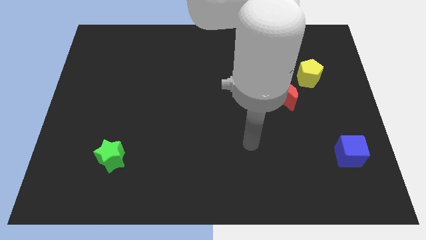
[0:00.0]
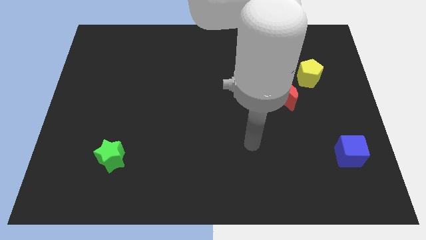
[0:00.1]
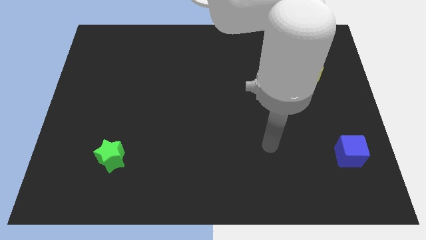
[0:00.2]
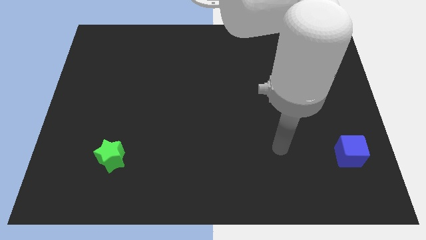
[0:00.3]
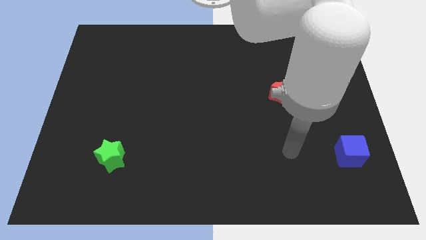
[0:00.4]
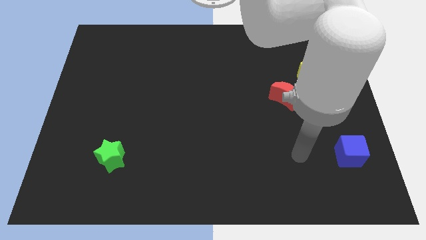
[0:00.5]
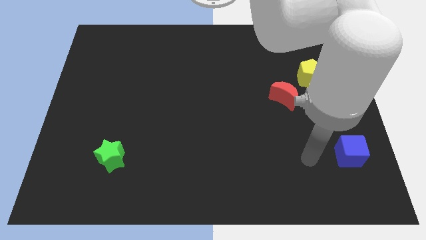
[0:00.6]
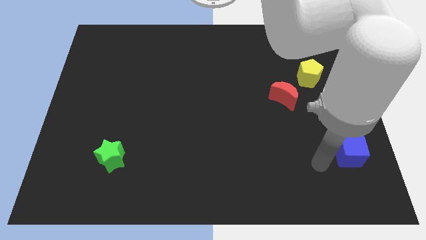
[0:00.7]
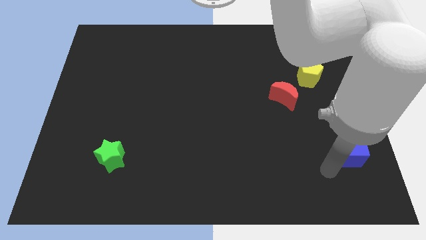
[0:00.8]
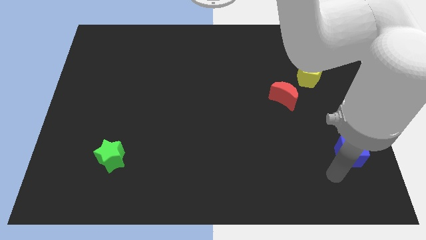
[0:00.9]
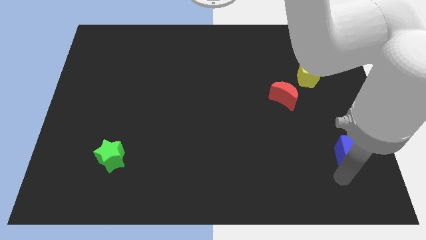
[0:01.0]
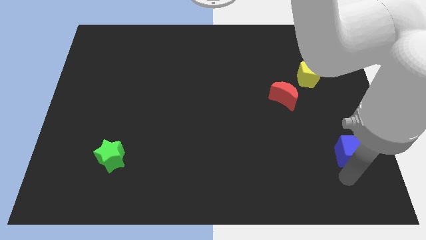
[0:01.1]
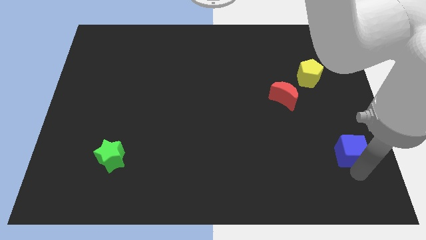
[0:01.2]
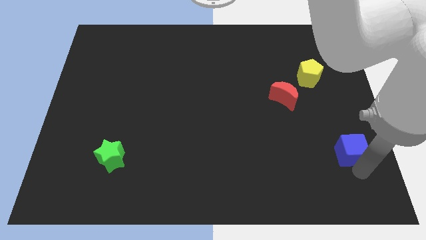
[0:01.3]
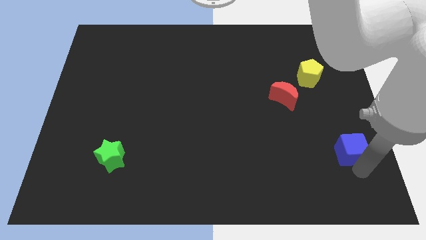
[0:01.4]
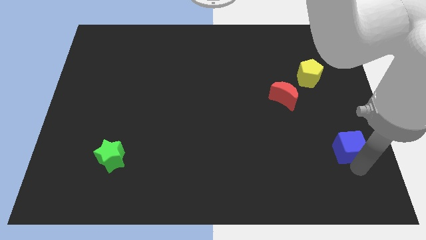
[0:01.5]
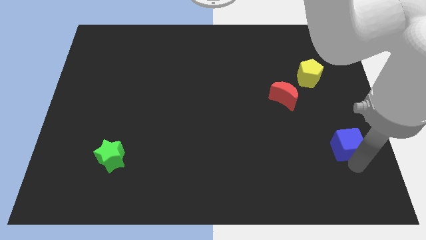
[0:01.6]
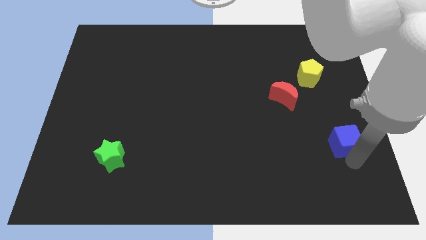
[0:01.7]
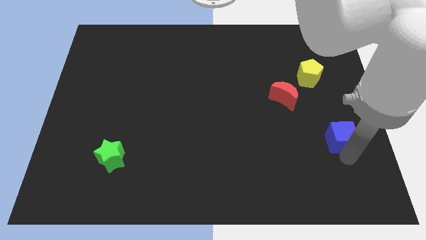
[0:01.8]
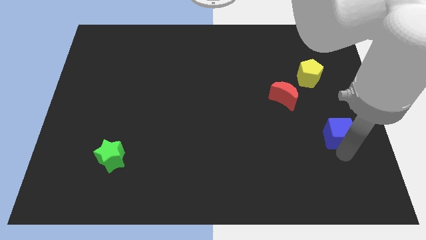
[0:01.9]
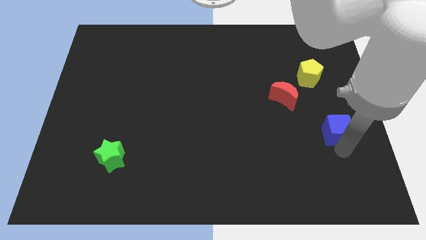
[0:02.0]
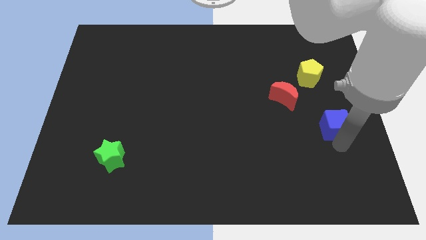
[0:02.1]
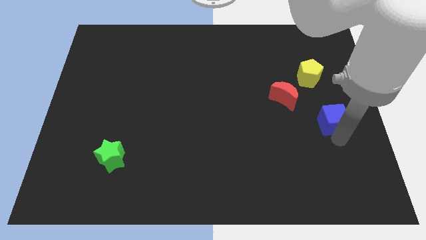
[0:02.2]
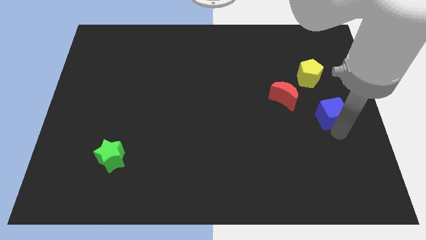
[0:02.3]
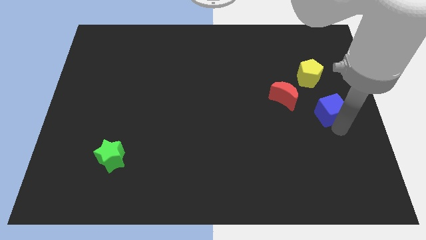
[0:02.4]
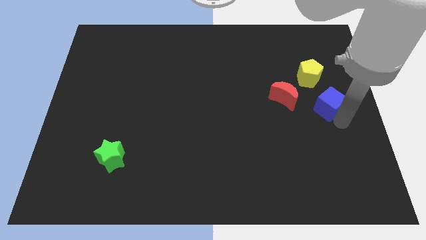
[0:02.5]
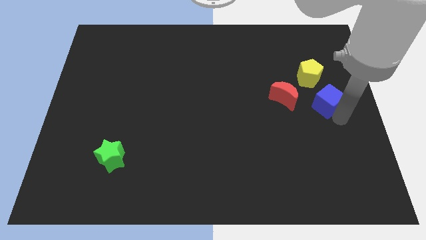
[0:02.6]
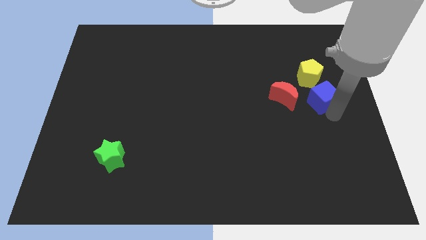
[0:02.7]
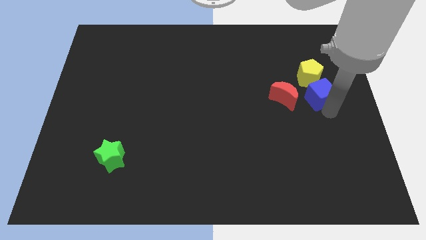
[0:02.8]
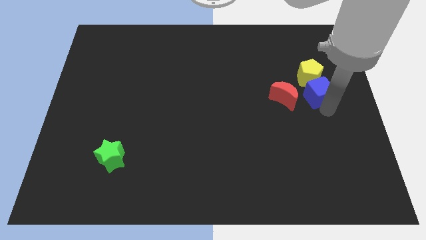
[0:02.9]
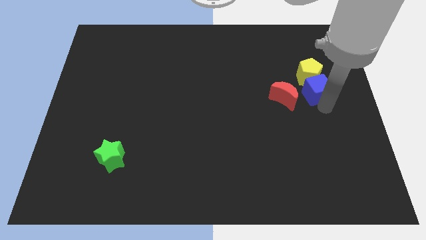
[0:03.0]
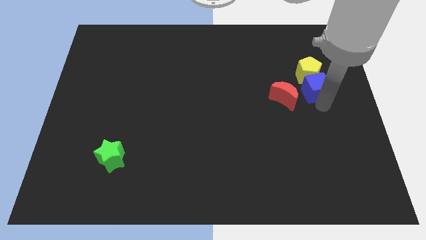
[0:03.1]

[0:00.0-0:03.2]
move the cube towards the yellow pentagon

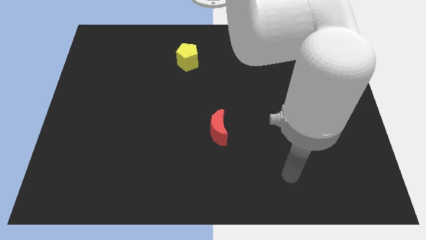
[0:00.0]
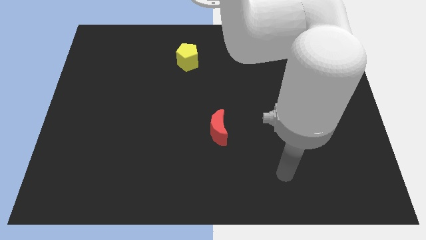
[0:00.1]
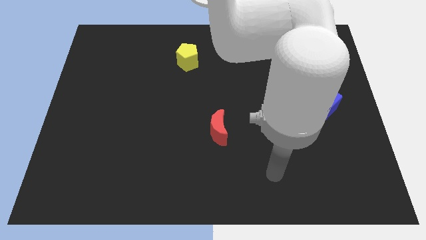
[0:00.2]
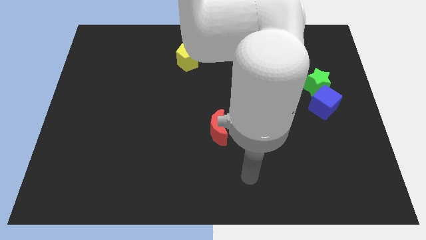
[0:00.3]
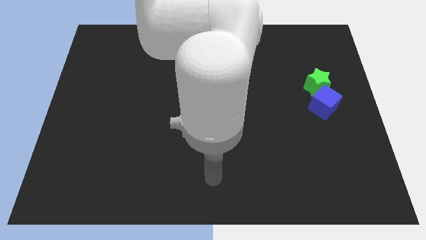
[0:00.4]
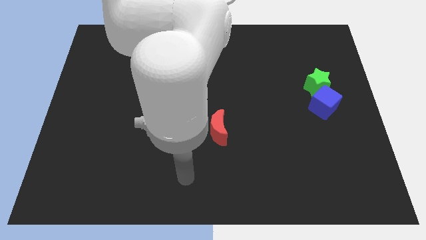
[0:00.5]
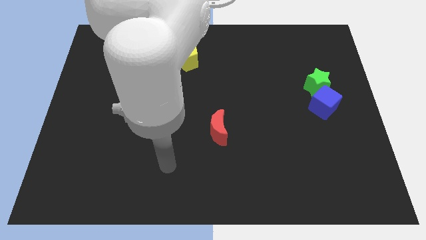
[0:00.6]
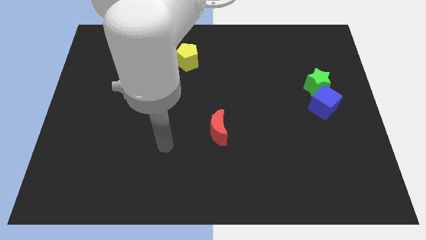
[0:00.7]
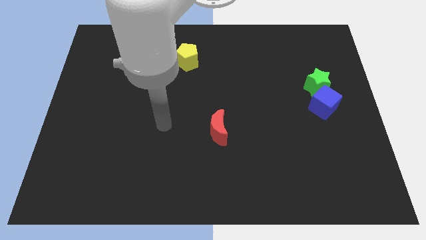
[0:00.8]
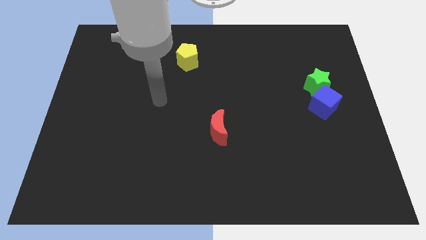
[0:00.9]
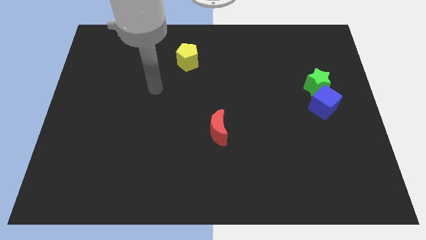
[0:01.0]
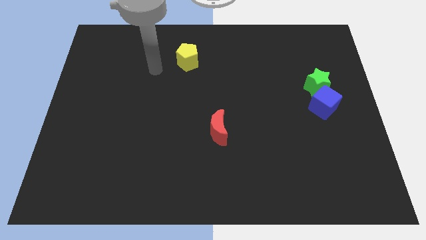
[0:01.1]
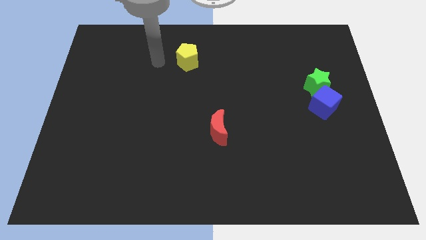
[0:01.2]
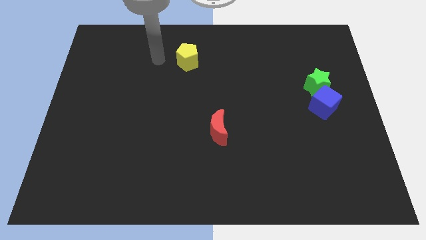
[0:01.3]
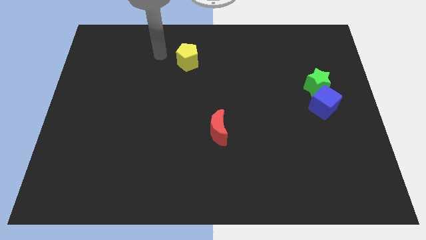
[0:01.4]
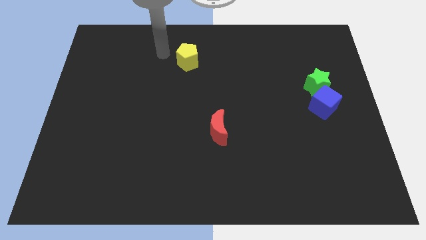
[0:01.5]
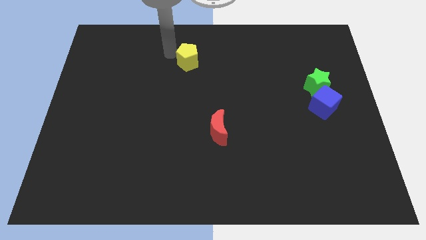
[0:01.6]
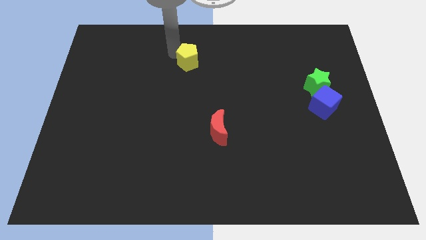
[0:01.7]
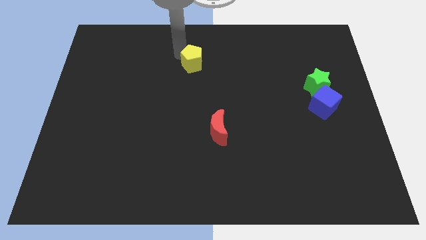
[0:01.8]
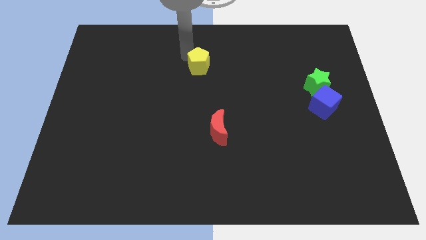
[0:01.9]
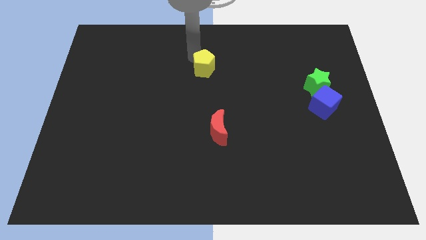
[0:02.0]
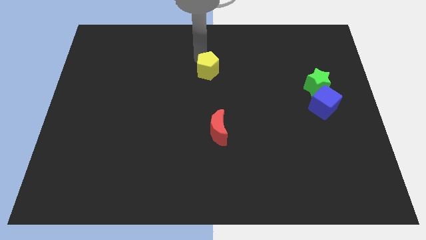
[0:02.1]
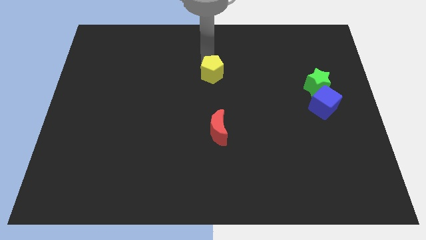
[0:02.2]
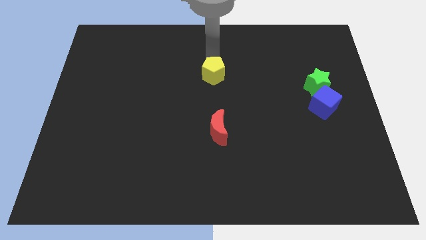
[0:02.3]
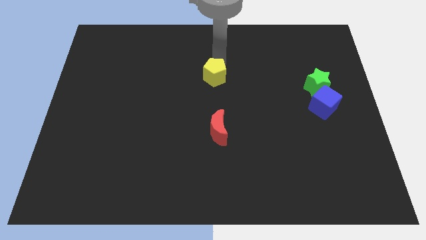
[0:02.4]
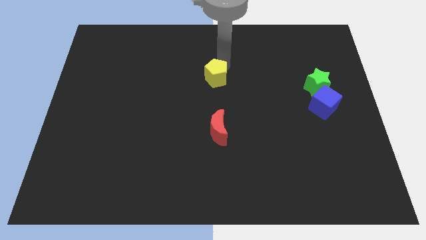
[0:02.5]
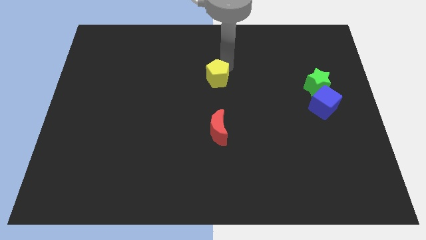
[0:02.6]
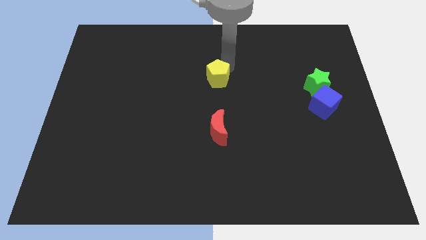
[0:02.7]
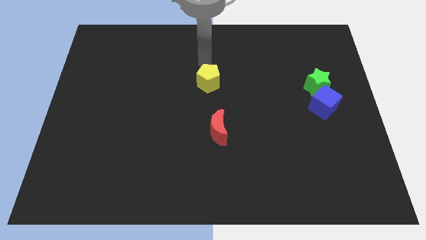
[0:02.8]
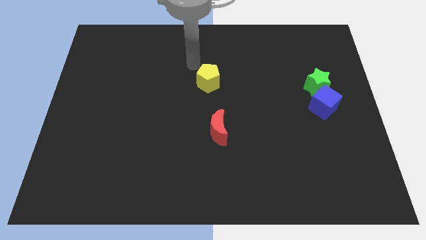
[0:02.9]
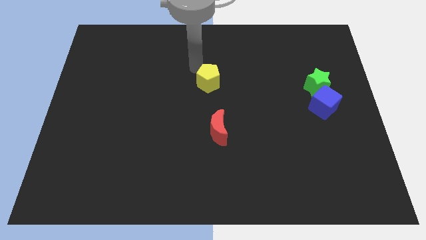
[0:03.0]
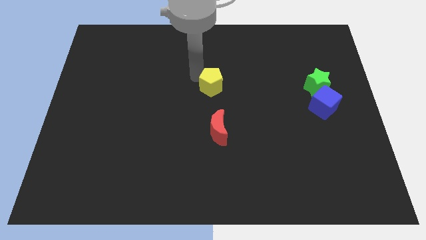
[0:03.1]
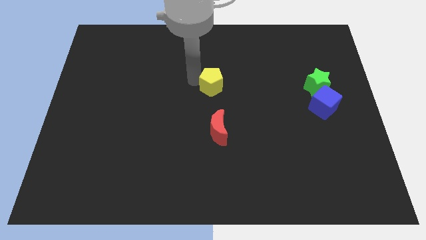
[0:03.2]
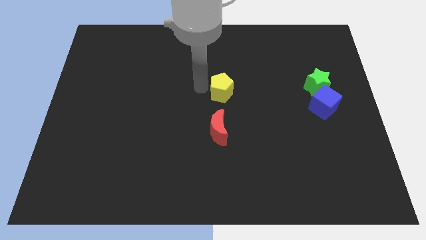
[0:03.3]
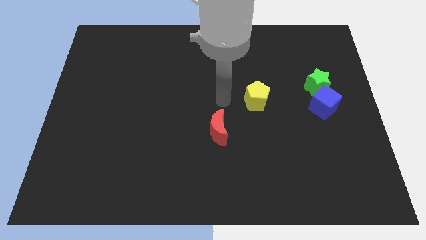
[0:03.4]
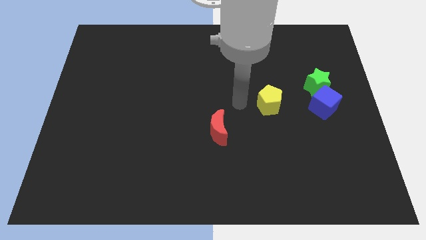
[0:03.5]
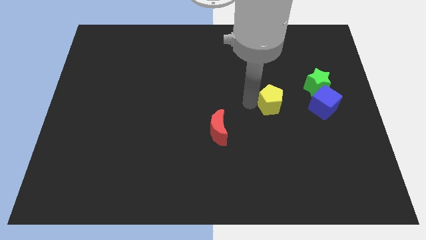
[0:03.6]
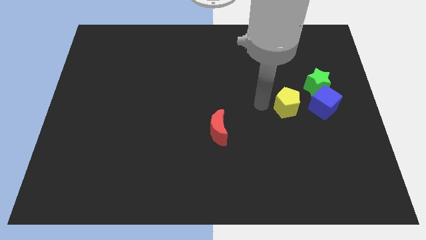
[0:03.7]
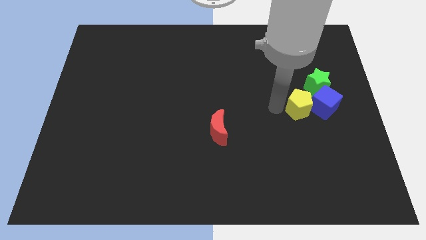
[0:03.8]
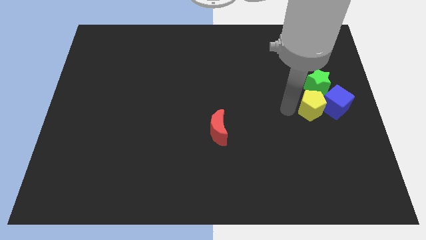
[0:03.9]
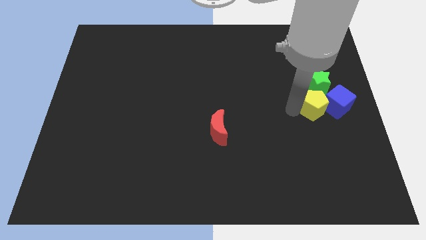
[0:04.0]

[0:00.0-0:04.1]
put the yellow pentagon close to the cube

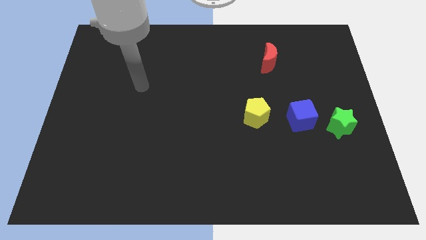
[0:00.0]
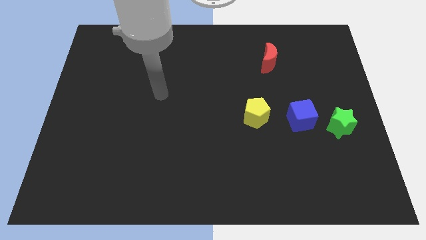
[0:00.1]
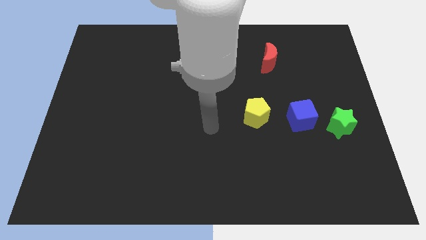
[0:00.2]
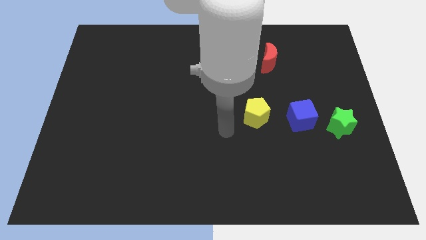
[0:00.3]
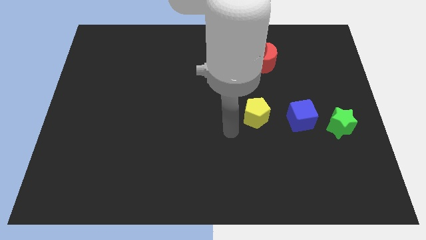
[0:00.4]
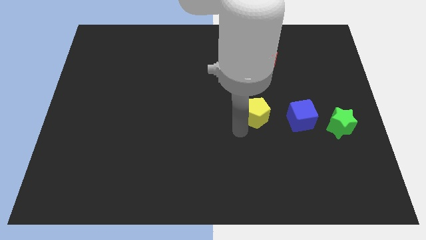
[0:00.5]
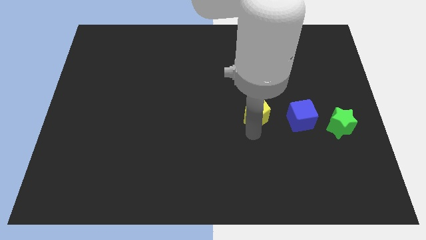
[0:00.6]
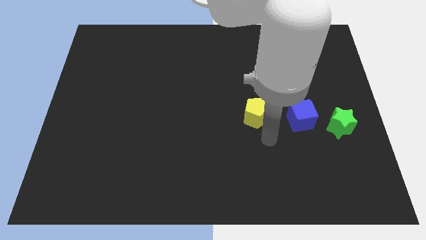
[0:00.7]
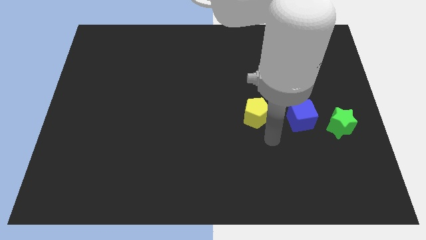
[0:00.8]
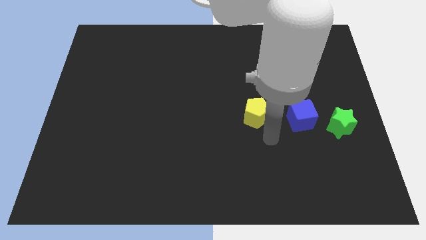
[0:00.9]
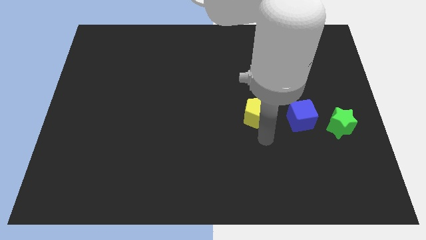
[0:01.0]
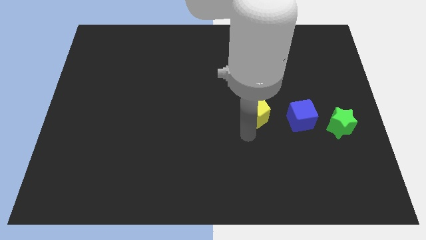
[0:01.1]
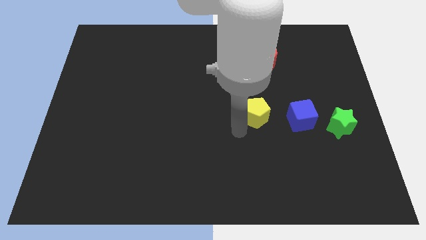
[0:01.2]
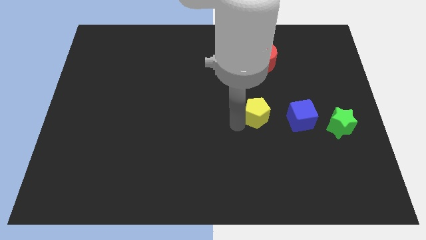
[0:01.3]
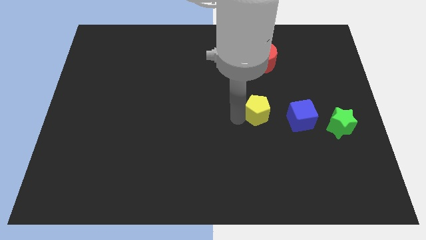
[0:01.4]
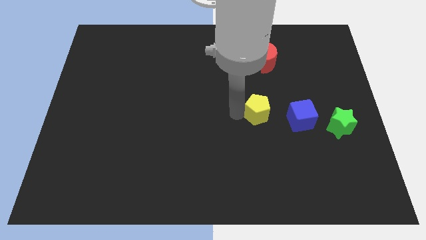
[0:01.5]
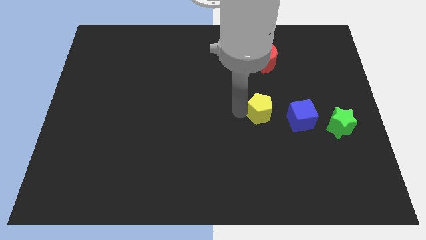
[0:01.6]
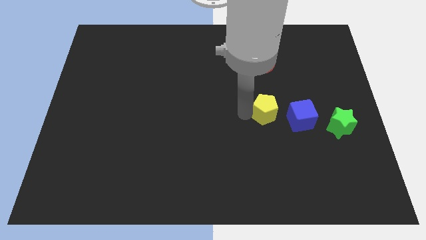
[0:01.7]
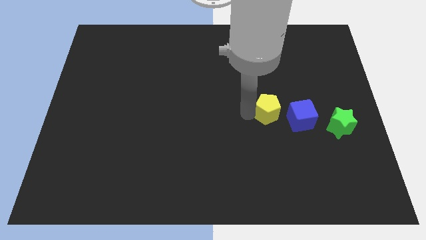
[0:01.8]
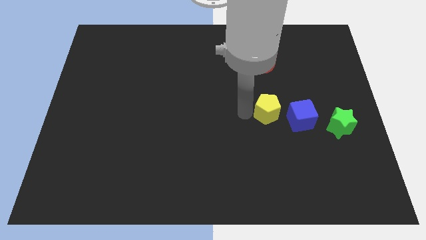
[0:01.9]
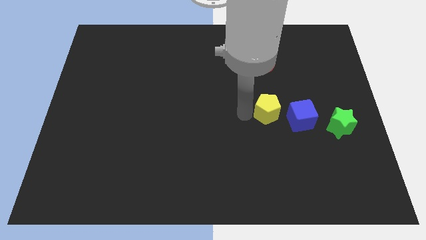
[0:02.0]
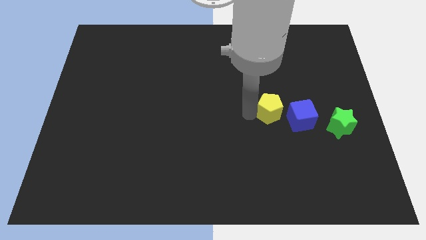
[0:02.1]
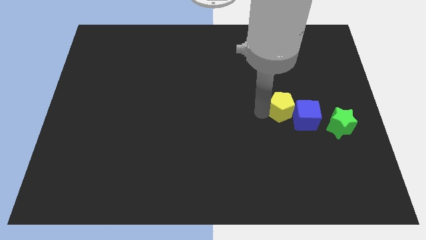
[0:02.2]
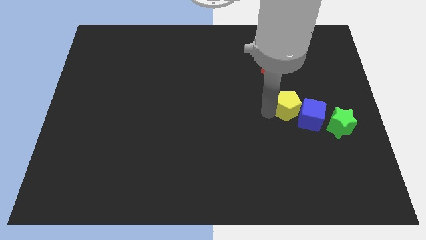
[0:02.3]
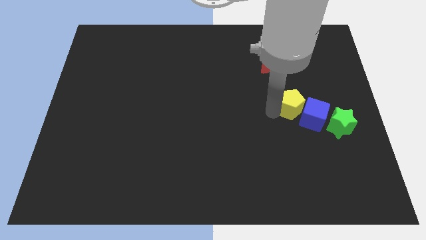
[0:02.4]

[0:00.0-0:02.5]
put the yellow block close to the cube
